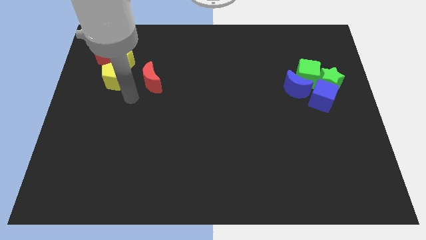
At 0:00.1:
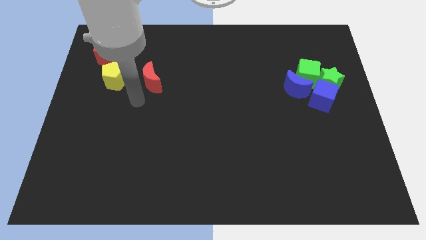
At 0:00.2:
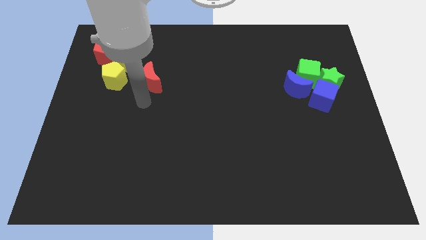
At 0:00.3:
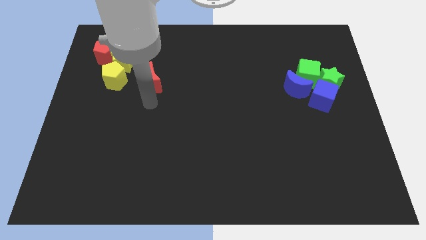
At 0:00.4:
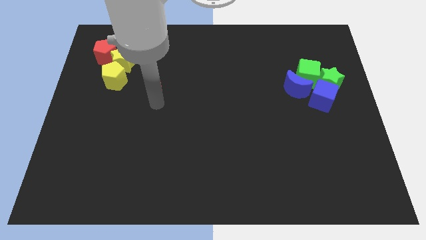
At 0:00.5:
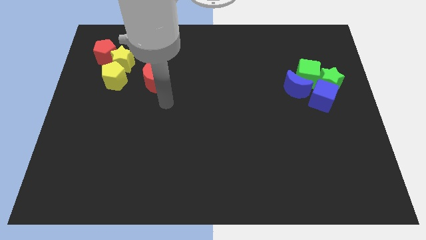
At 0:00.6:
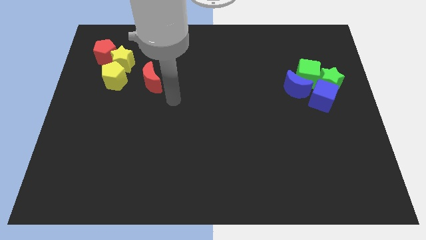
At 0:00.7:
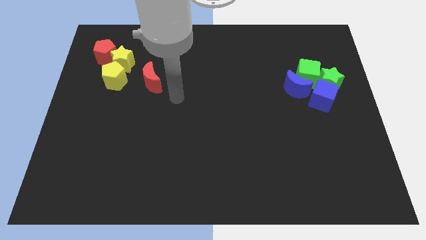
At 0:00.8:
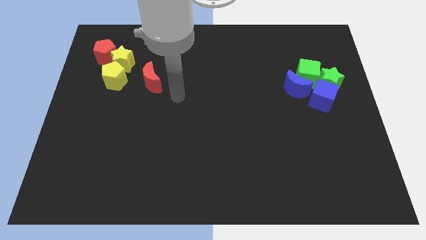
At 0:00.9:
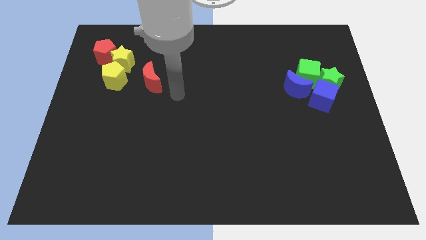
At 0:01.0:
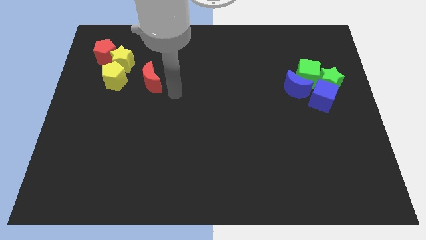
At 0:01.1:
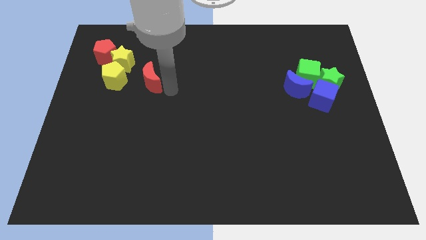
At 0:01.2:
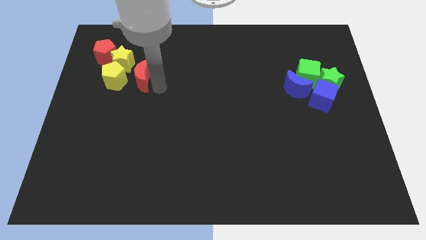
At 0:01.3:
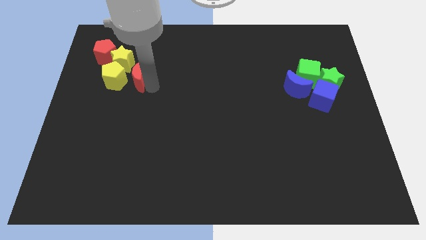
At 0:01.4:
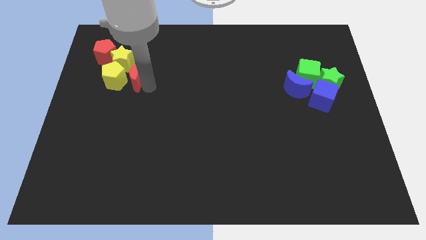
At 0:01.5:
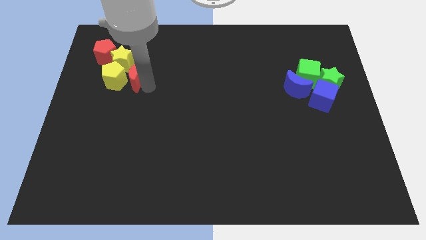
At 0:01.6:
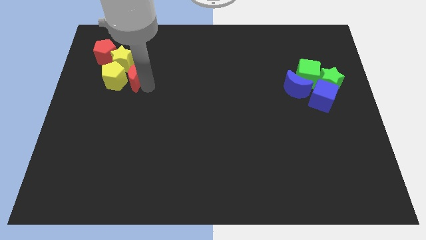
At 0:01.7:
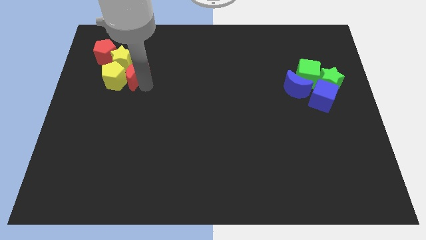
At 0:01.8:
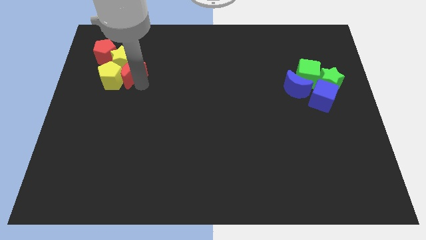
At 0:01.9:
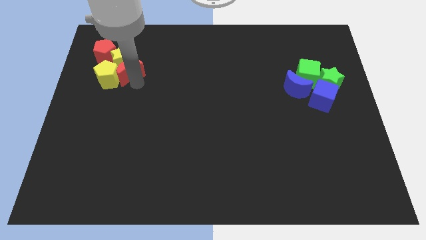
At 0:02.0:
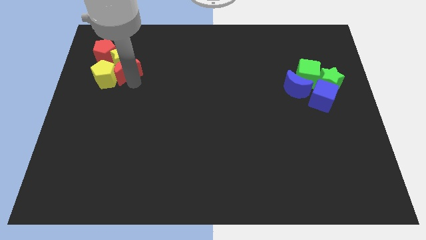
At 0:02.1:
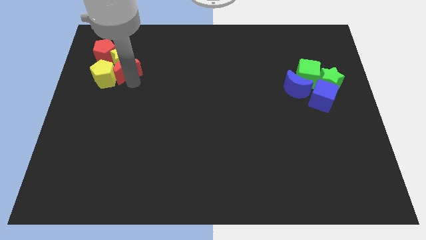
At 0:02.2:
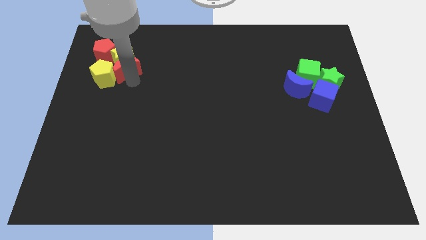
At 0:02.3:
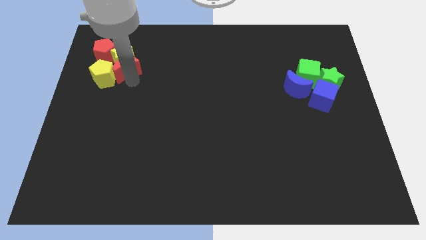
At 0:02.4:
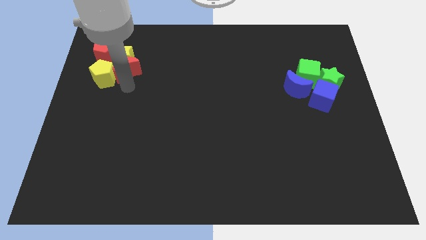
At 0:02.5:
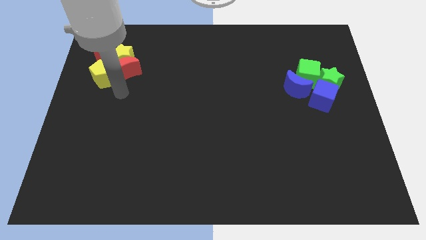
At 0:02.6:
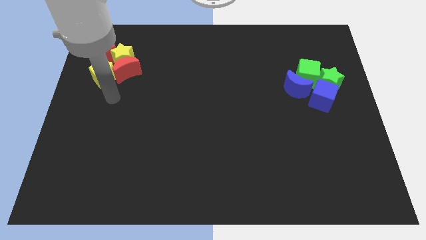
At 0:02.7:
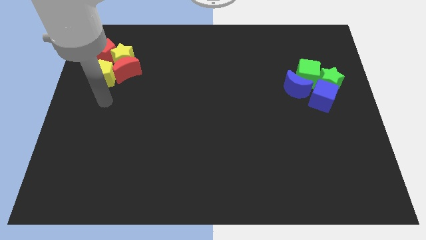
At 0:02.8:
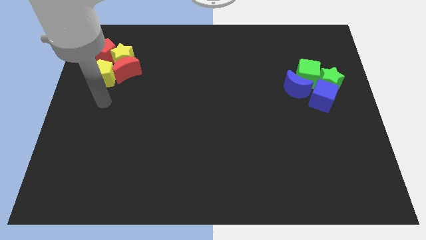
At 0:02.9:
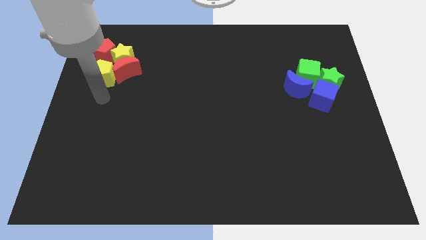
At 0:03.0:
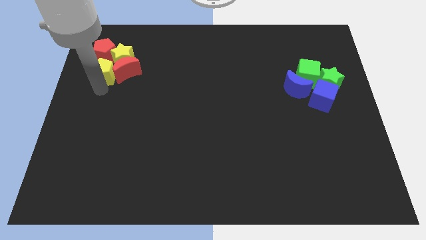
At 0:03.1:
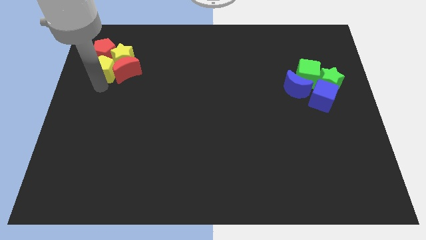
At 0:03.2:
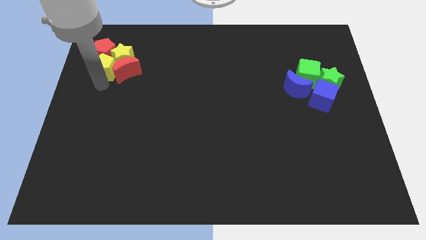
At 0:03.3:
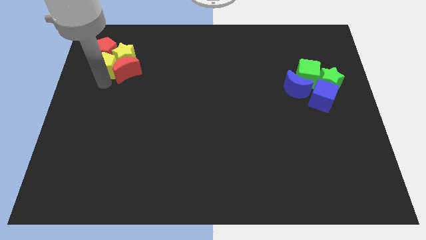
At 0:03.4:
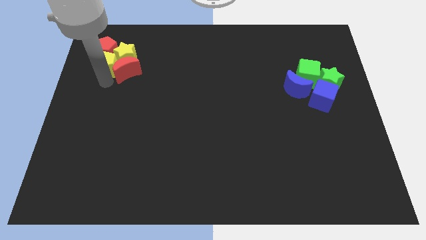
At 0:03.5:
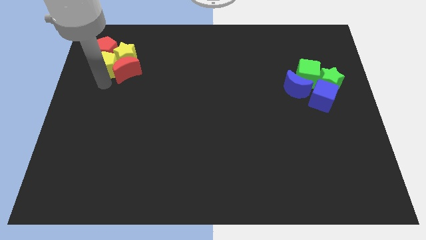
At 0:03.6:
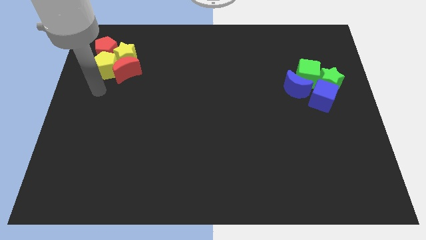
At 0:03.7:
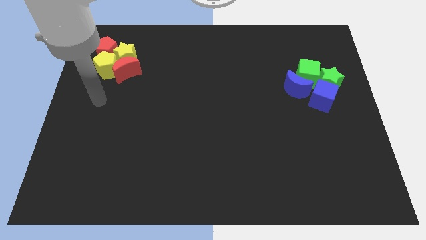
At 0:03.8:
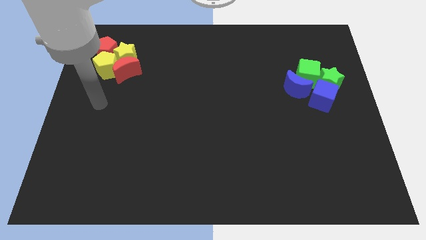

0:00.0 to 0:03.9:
push the red moon into the yellow blocks

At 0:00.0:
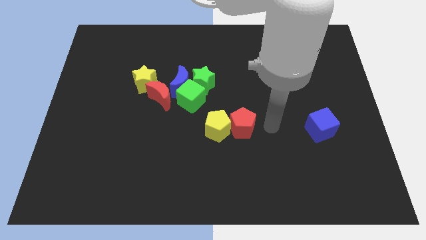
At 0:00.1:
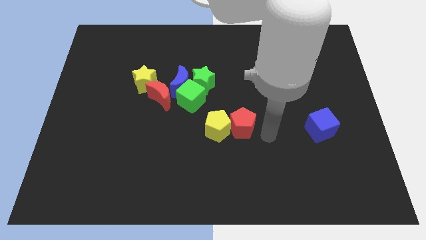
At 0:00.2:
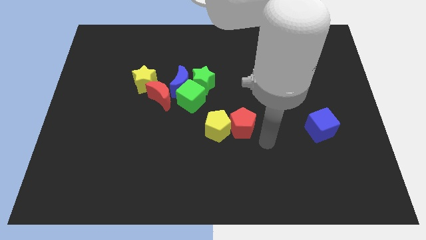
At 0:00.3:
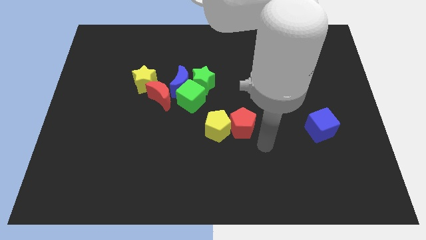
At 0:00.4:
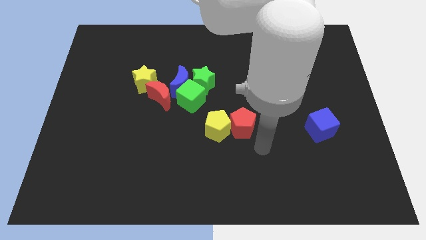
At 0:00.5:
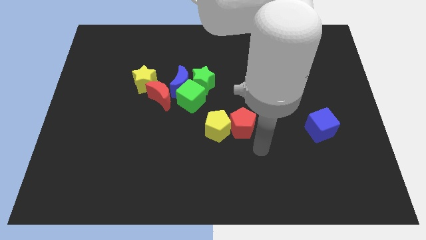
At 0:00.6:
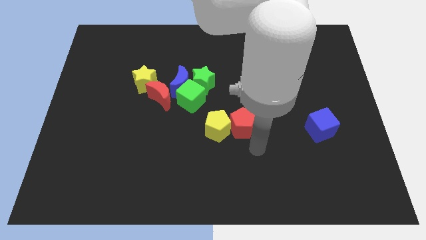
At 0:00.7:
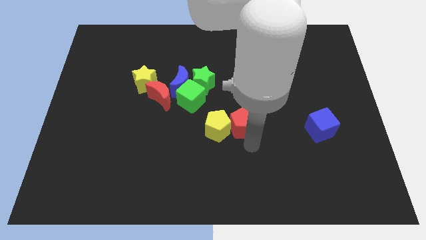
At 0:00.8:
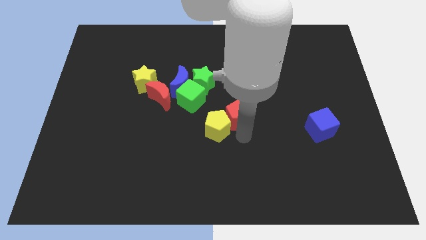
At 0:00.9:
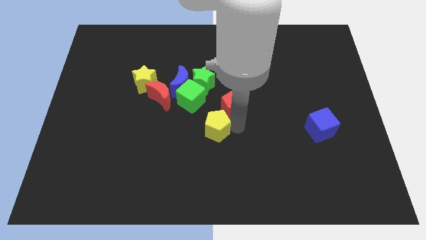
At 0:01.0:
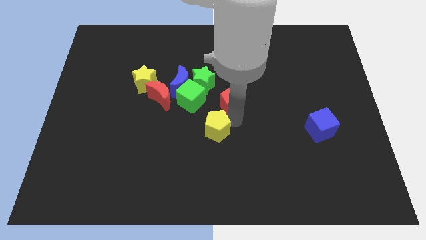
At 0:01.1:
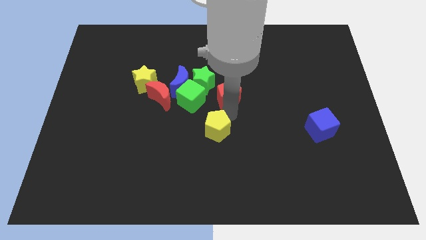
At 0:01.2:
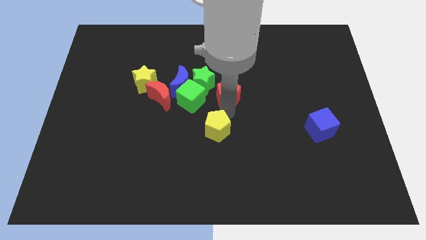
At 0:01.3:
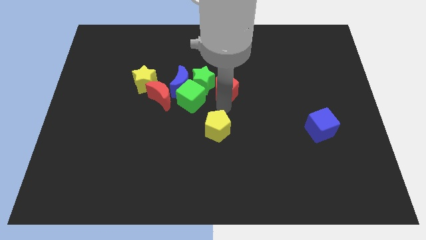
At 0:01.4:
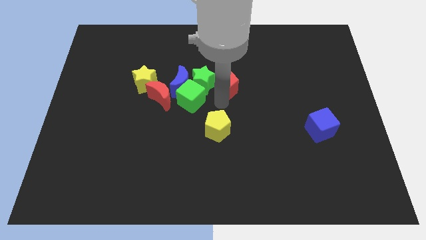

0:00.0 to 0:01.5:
put the red pentagon to the right side of the green star

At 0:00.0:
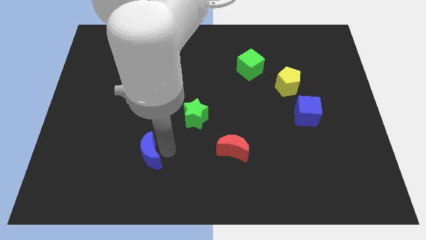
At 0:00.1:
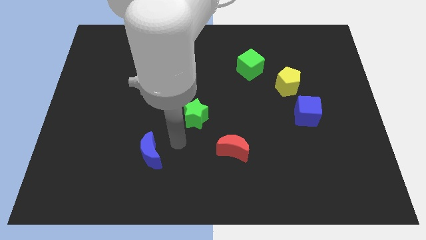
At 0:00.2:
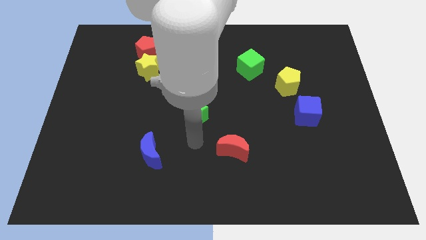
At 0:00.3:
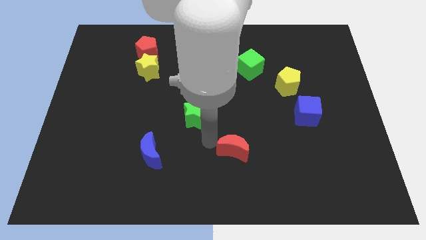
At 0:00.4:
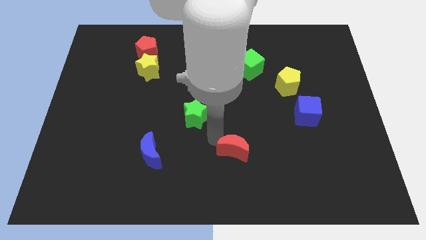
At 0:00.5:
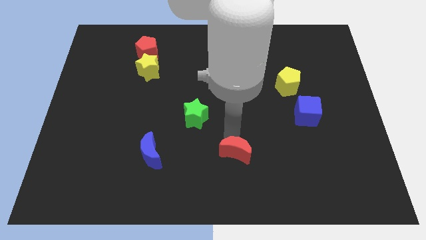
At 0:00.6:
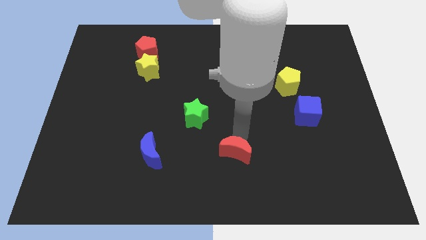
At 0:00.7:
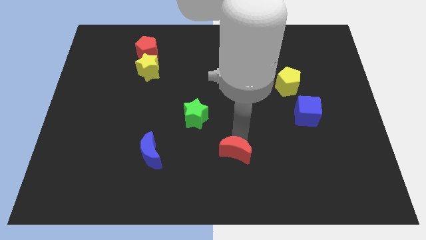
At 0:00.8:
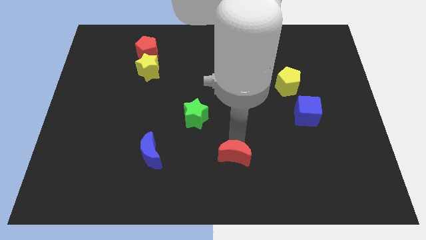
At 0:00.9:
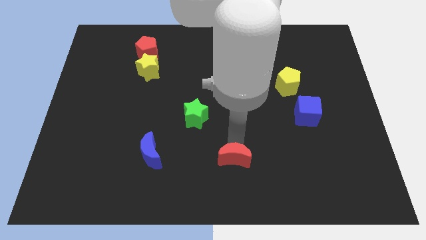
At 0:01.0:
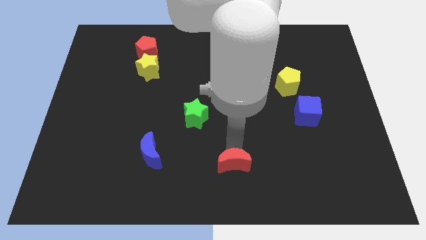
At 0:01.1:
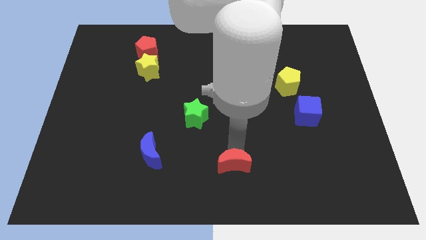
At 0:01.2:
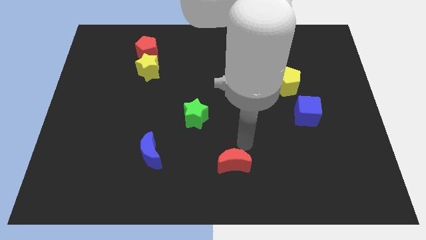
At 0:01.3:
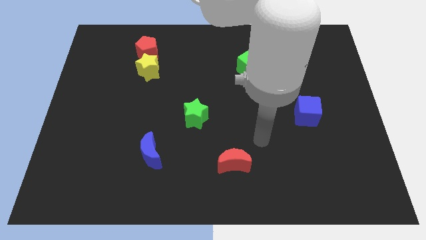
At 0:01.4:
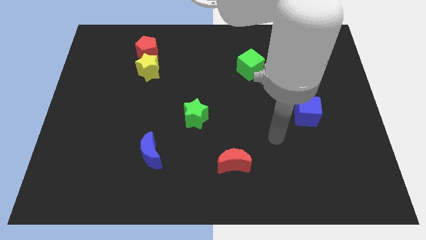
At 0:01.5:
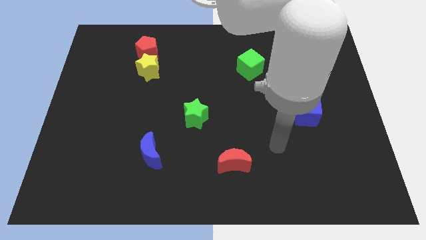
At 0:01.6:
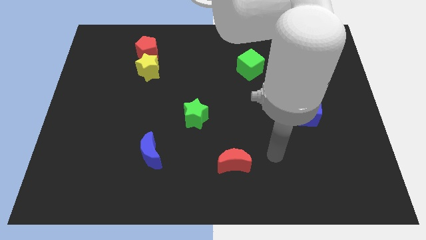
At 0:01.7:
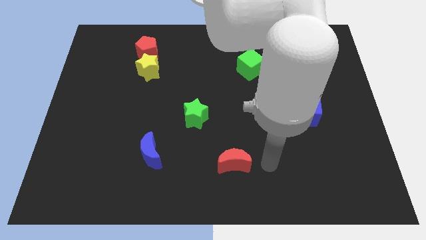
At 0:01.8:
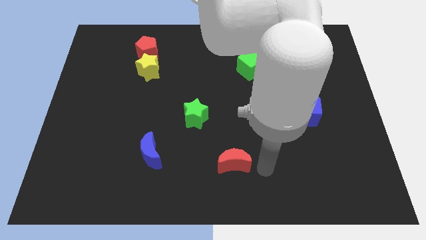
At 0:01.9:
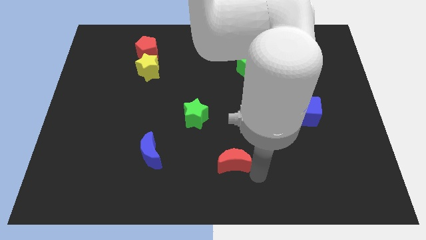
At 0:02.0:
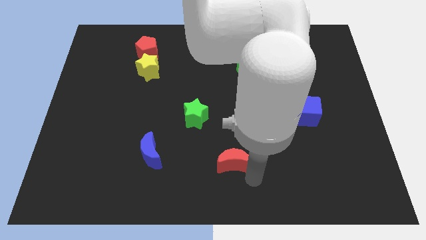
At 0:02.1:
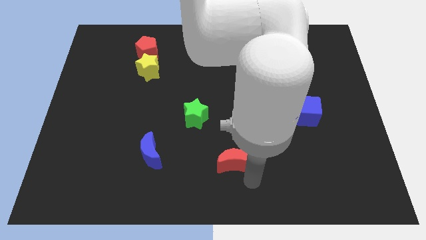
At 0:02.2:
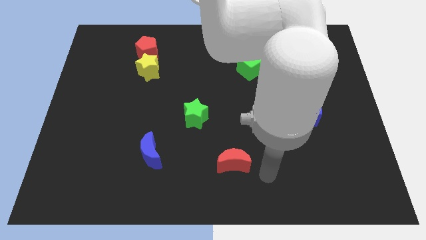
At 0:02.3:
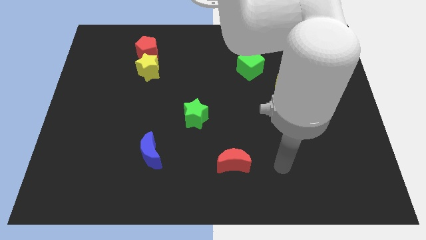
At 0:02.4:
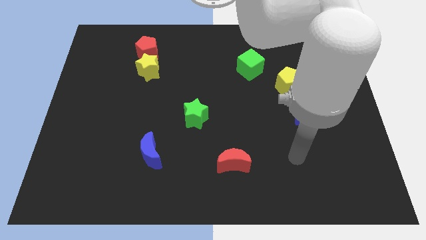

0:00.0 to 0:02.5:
move the red crescent slightly to the bottom

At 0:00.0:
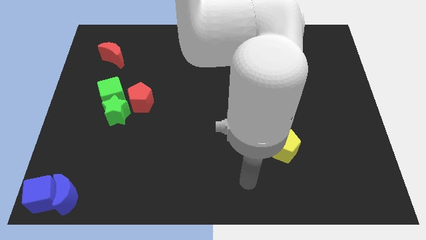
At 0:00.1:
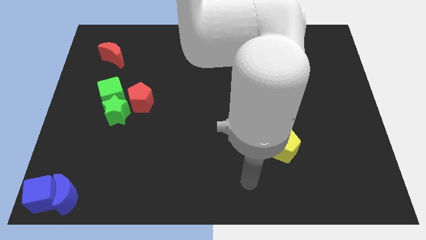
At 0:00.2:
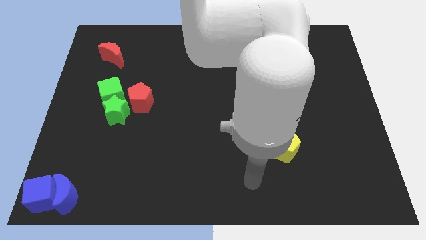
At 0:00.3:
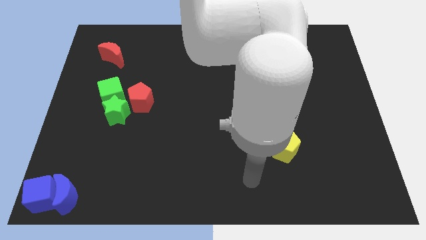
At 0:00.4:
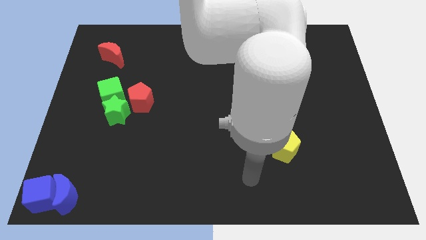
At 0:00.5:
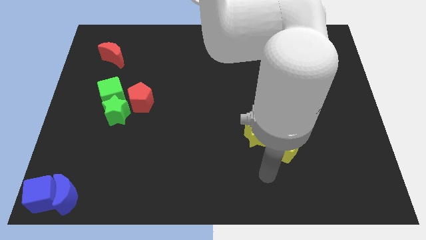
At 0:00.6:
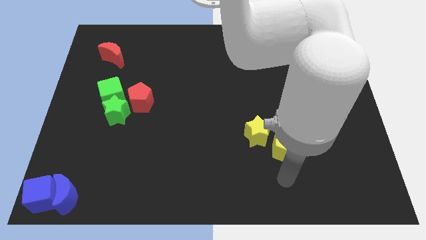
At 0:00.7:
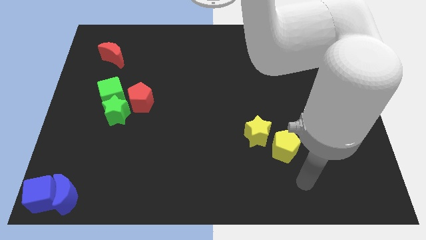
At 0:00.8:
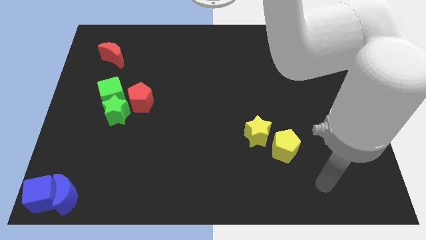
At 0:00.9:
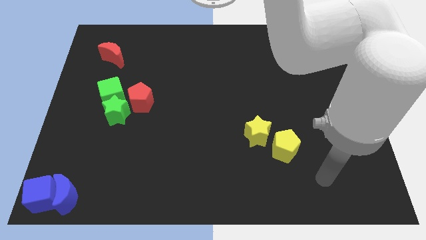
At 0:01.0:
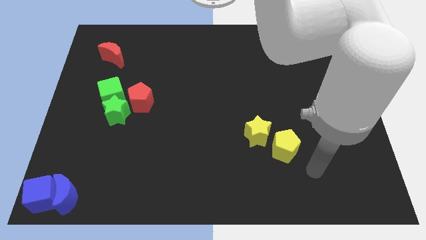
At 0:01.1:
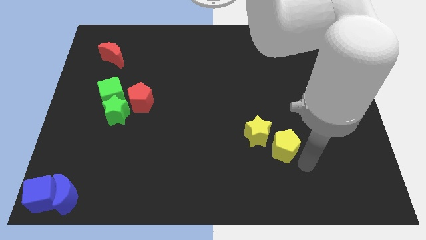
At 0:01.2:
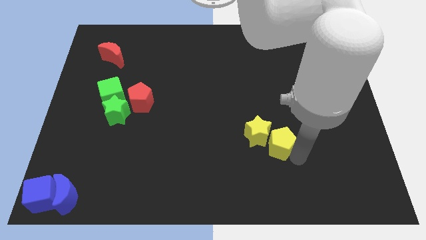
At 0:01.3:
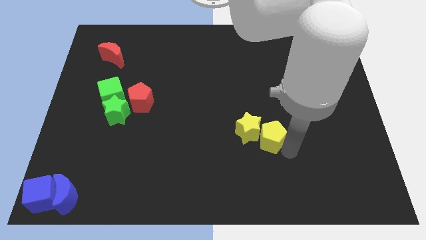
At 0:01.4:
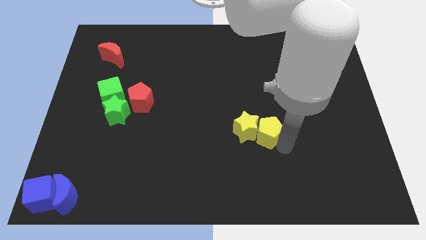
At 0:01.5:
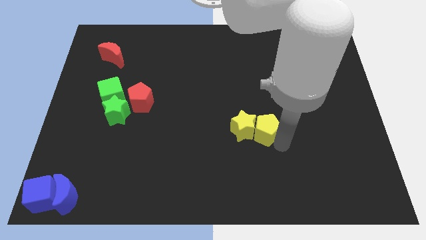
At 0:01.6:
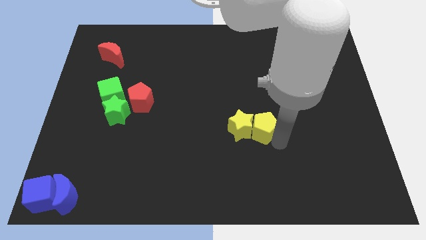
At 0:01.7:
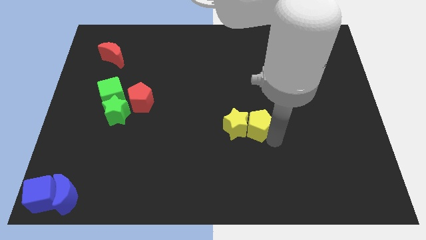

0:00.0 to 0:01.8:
push the yellow pentagon into the yellow star
